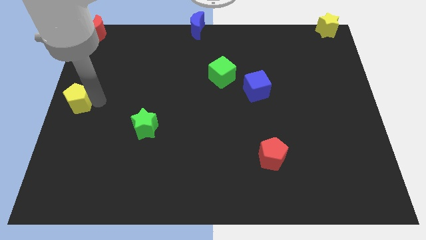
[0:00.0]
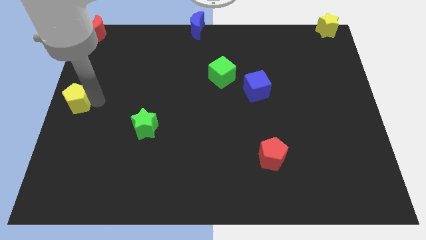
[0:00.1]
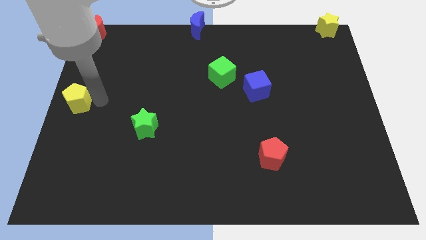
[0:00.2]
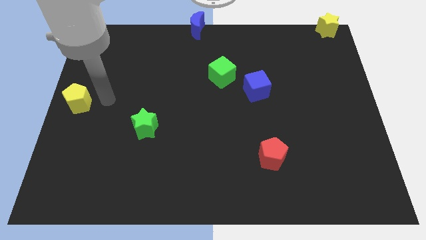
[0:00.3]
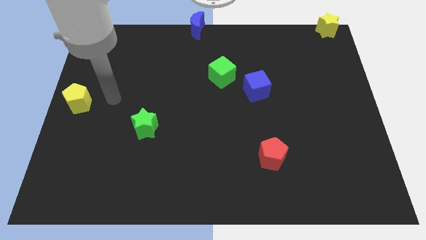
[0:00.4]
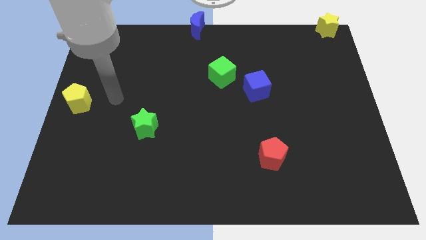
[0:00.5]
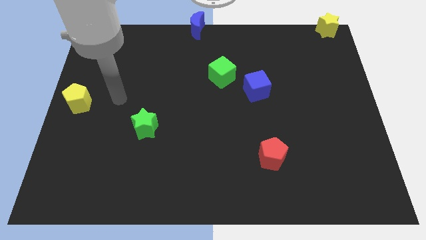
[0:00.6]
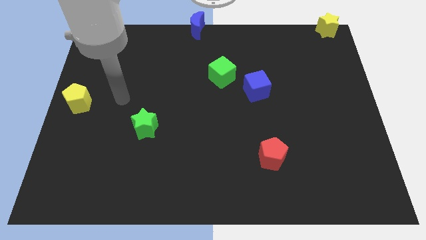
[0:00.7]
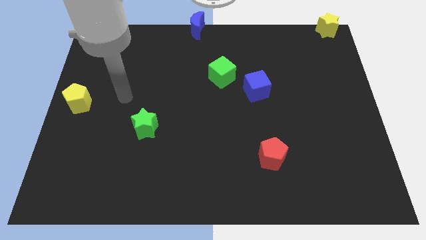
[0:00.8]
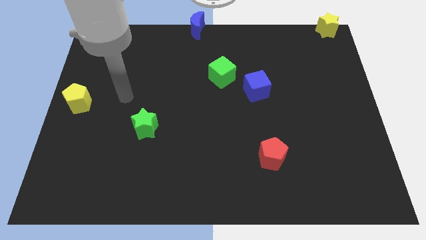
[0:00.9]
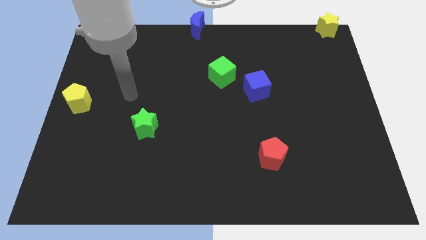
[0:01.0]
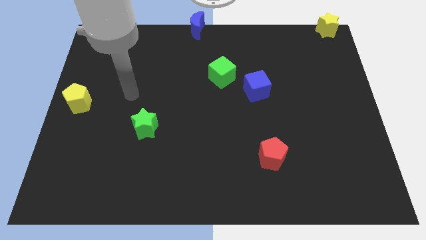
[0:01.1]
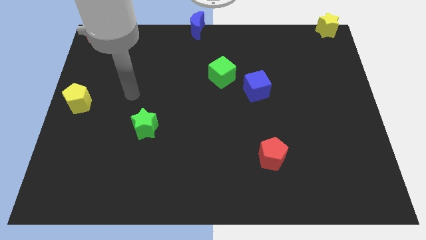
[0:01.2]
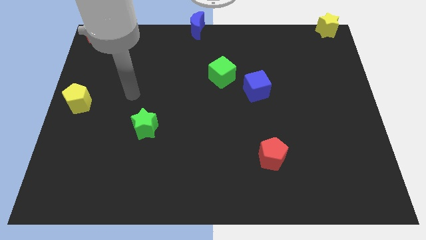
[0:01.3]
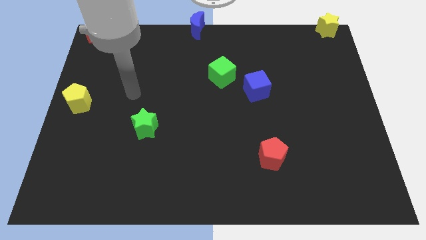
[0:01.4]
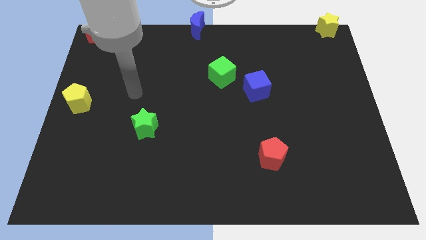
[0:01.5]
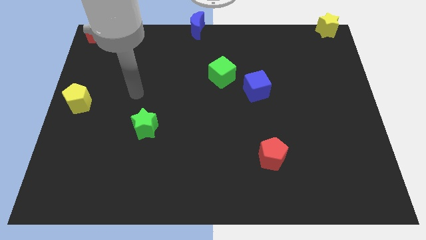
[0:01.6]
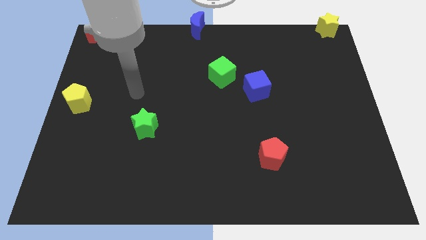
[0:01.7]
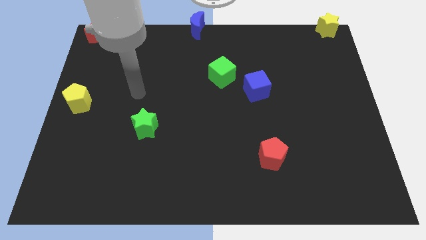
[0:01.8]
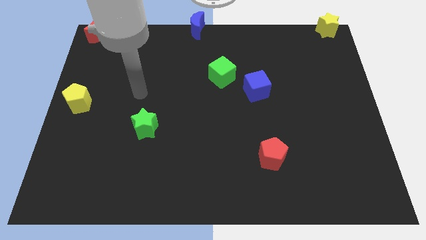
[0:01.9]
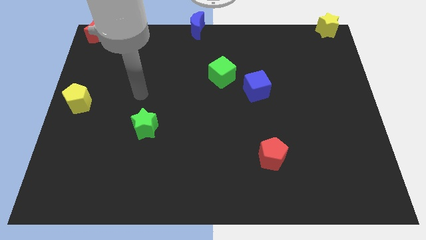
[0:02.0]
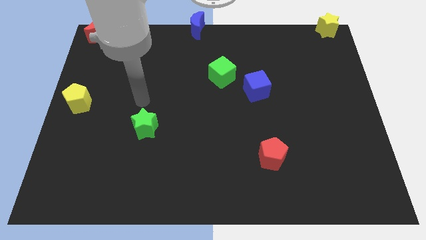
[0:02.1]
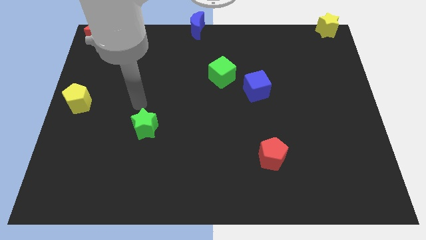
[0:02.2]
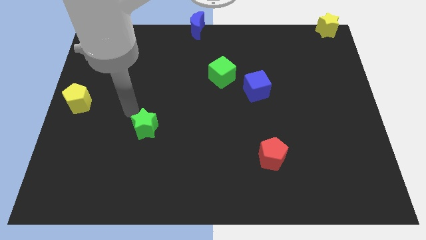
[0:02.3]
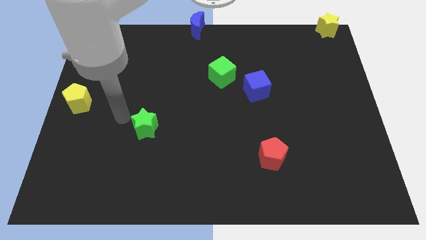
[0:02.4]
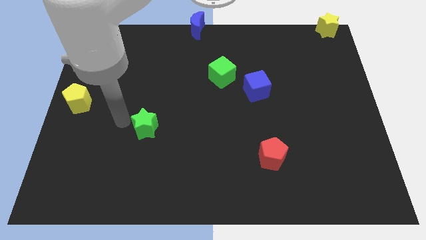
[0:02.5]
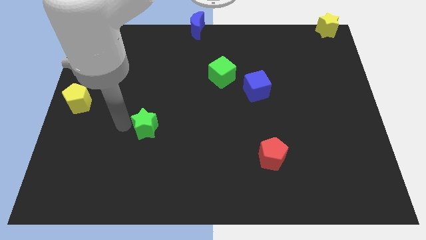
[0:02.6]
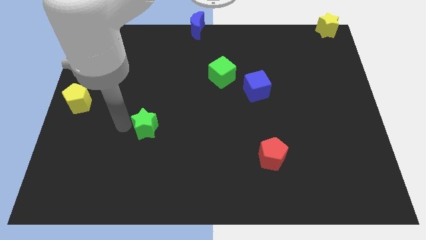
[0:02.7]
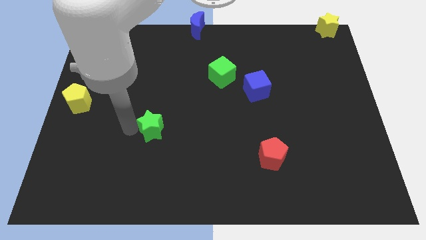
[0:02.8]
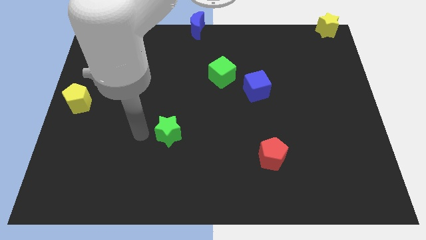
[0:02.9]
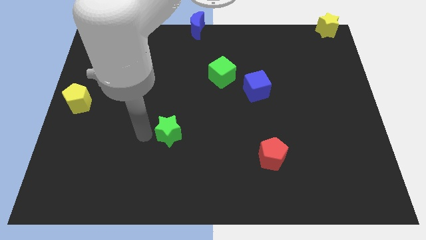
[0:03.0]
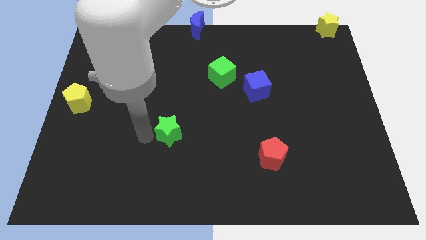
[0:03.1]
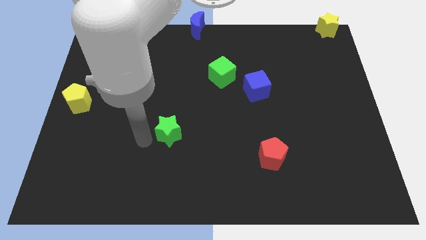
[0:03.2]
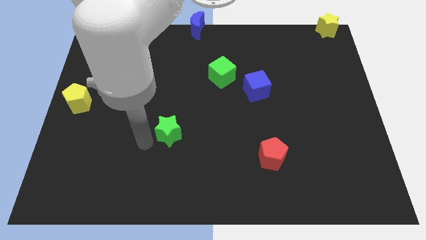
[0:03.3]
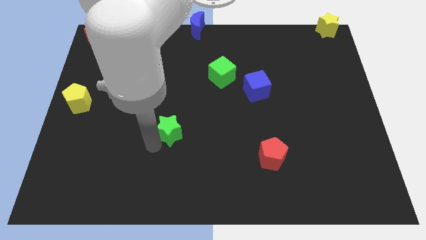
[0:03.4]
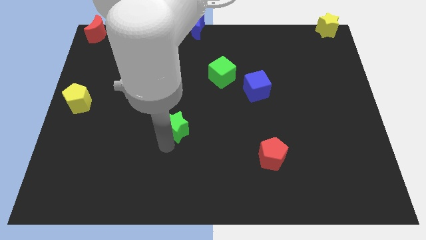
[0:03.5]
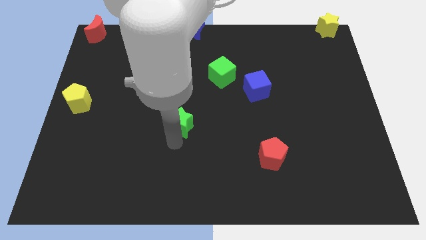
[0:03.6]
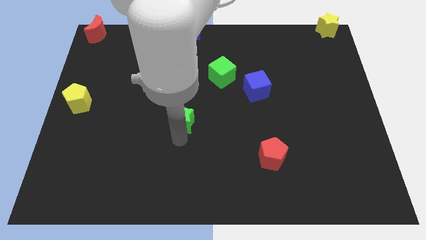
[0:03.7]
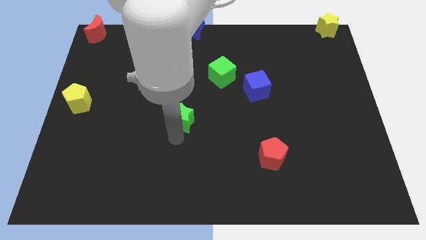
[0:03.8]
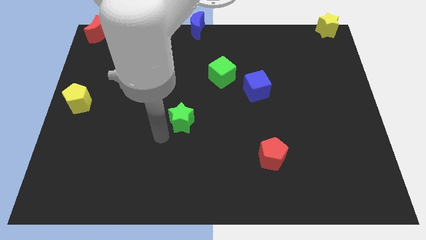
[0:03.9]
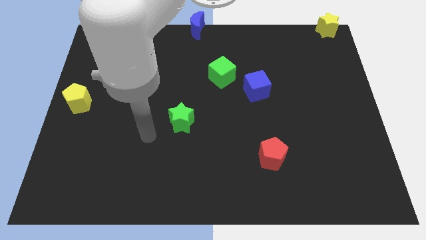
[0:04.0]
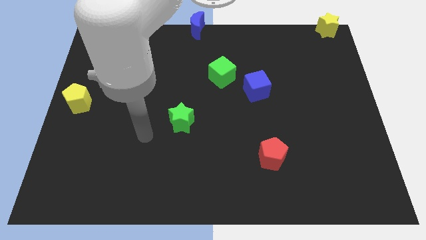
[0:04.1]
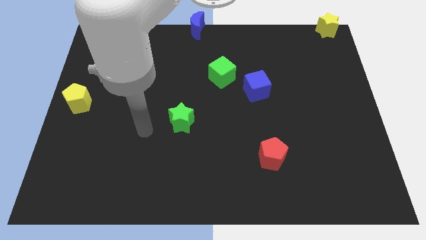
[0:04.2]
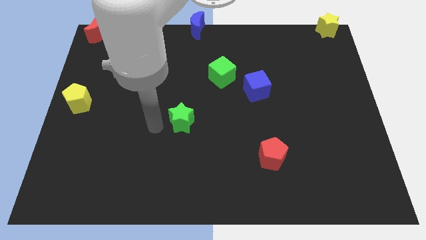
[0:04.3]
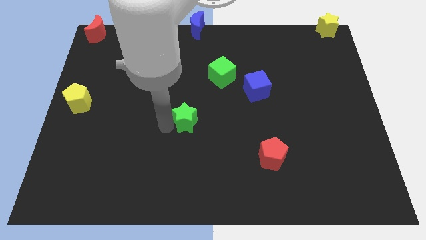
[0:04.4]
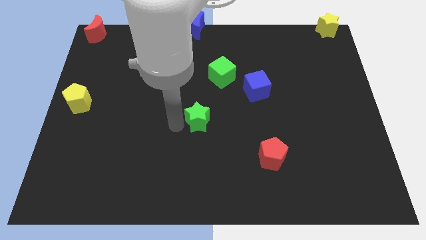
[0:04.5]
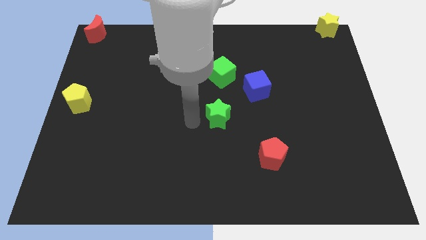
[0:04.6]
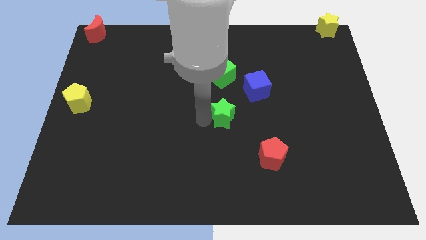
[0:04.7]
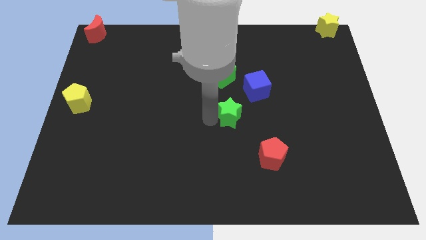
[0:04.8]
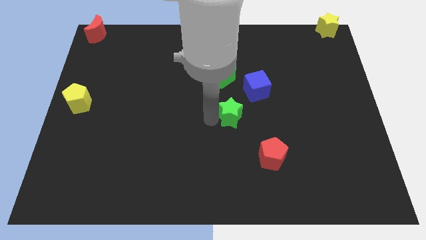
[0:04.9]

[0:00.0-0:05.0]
place green star below the green cube

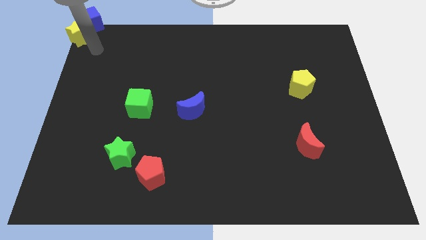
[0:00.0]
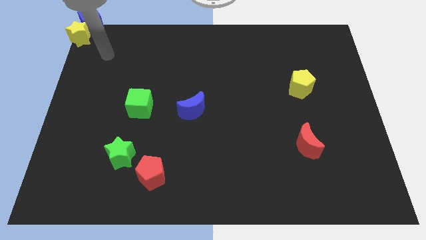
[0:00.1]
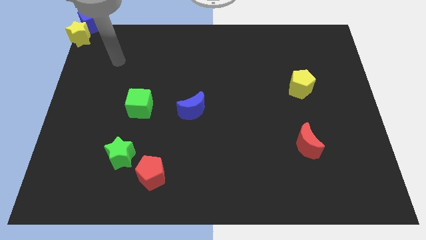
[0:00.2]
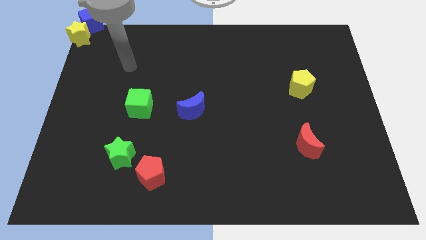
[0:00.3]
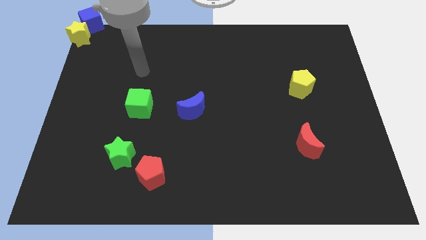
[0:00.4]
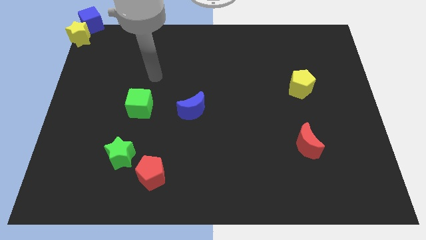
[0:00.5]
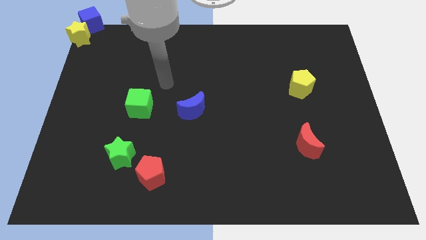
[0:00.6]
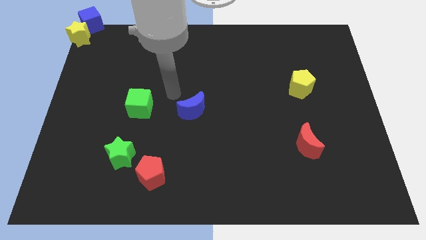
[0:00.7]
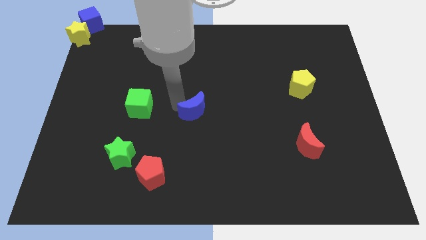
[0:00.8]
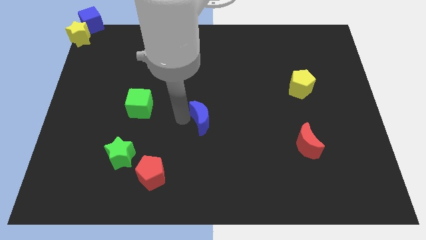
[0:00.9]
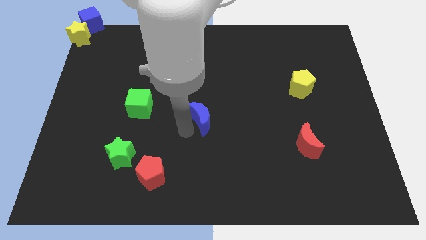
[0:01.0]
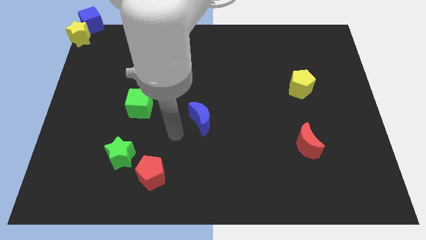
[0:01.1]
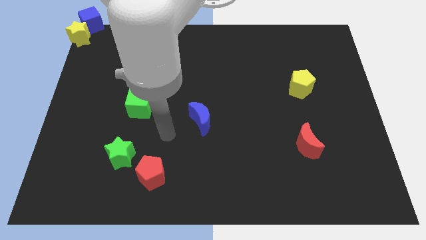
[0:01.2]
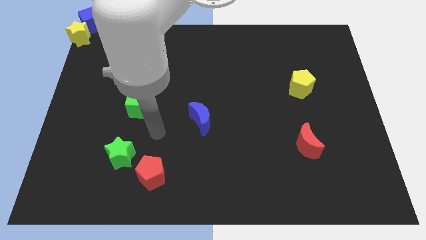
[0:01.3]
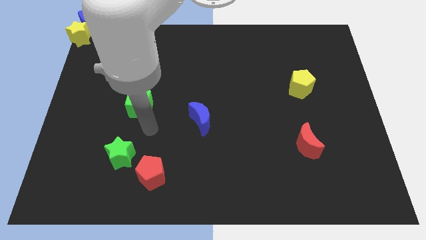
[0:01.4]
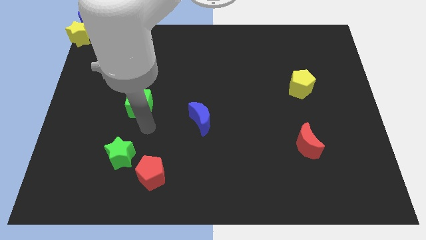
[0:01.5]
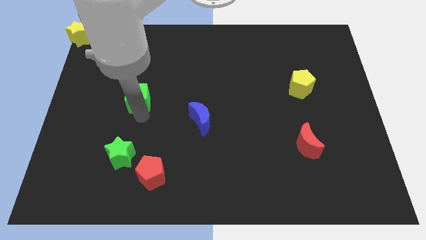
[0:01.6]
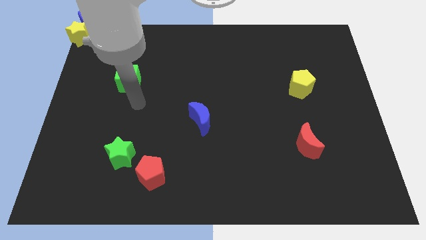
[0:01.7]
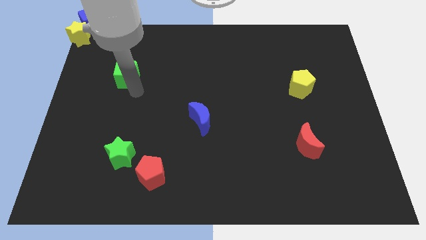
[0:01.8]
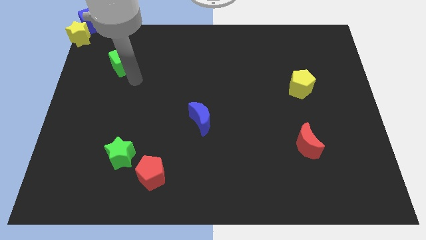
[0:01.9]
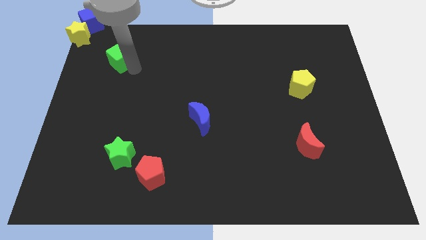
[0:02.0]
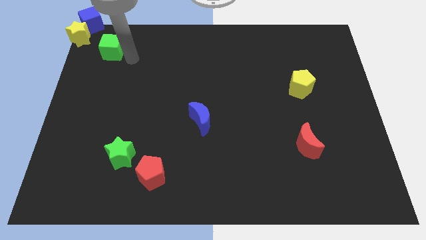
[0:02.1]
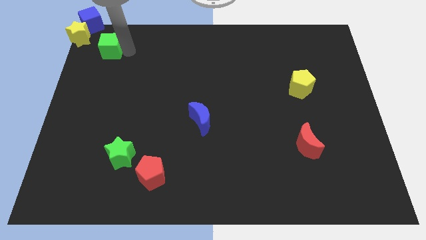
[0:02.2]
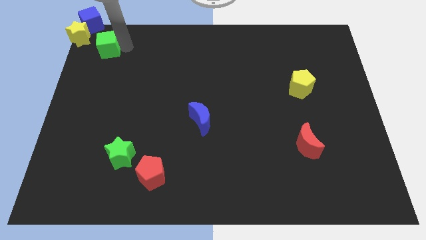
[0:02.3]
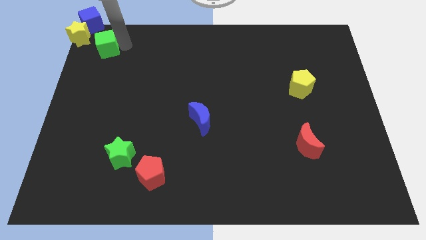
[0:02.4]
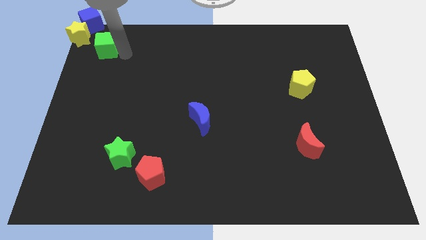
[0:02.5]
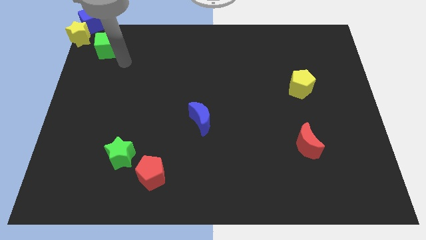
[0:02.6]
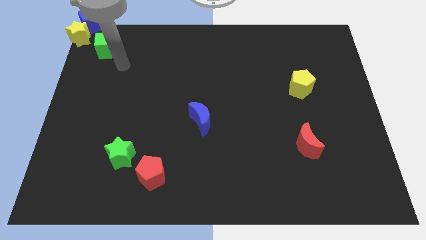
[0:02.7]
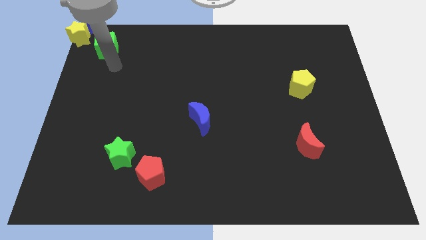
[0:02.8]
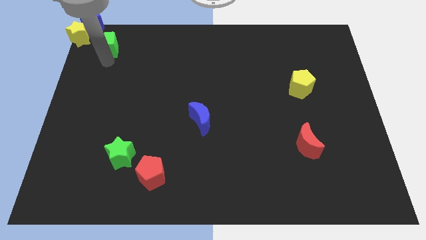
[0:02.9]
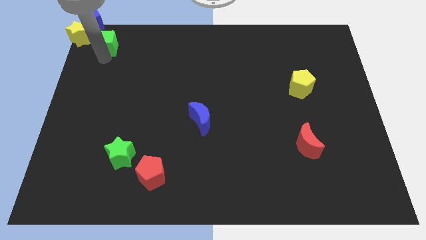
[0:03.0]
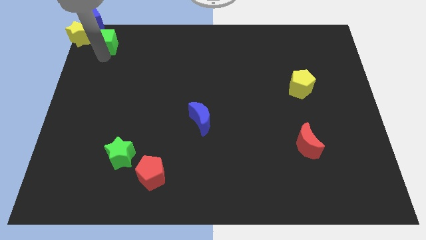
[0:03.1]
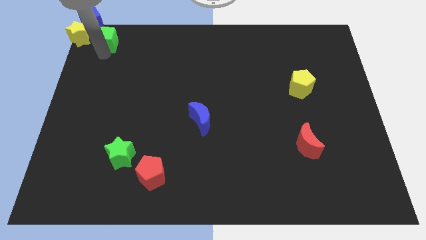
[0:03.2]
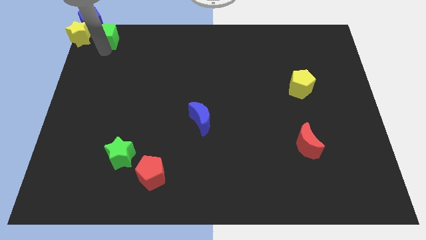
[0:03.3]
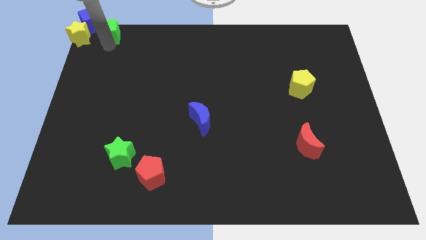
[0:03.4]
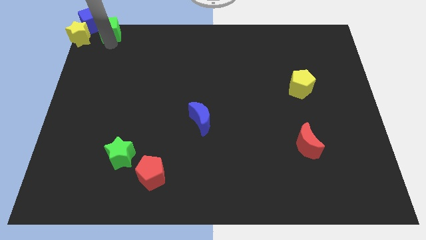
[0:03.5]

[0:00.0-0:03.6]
push the green cube towards the yellow star

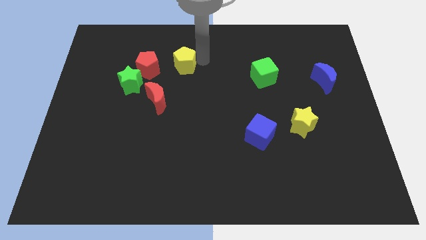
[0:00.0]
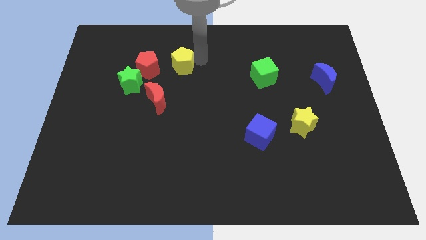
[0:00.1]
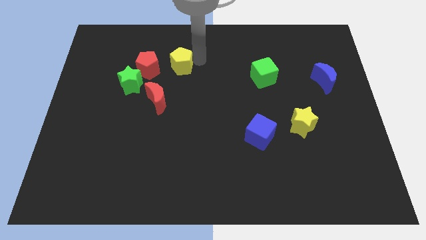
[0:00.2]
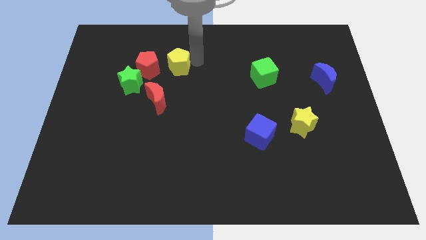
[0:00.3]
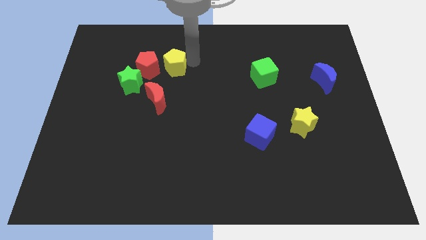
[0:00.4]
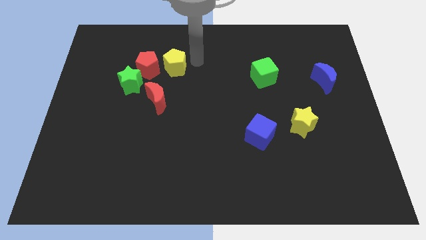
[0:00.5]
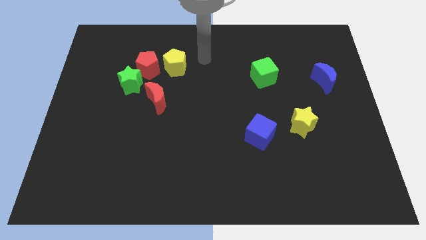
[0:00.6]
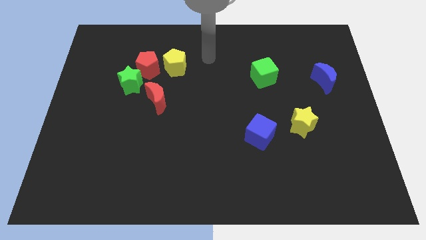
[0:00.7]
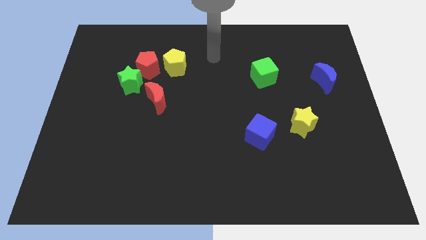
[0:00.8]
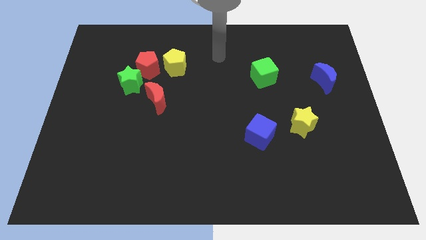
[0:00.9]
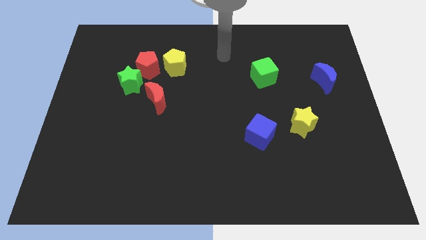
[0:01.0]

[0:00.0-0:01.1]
push yellow pentagon to the right of red pentagon
